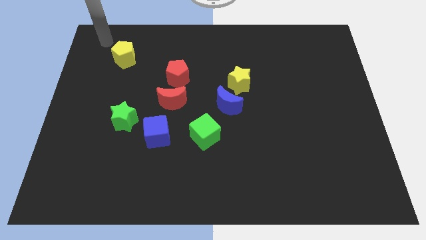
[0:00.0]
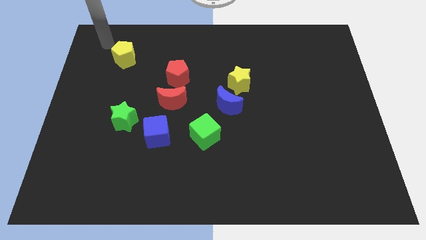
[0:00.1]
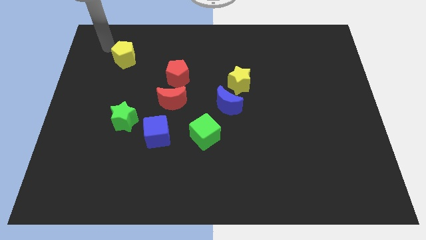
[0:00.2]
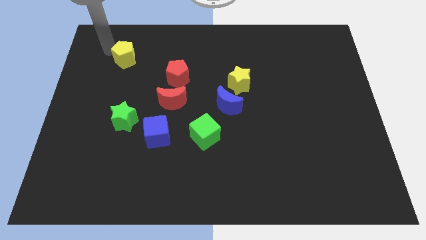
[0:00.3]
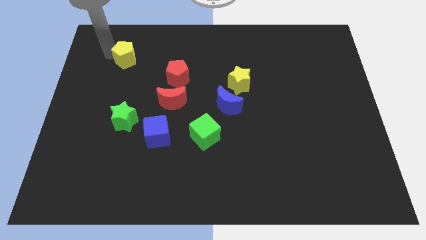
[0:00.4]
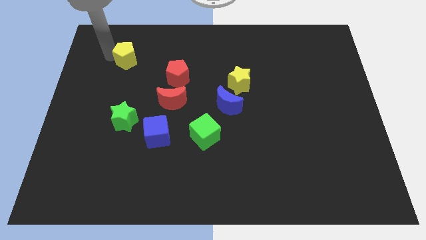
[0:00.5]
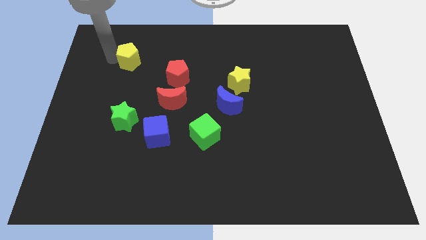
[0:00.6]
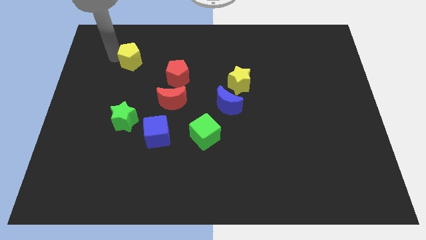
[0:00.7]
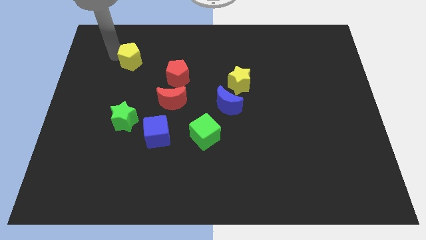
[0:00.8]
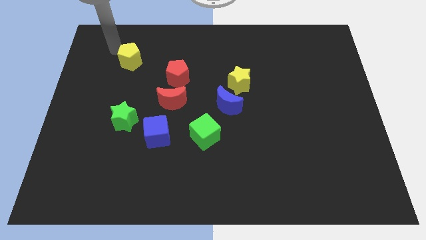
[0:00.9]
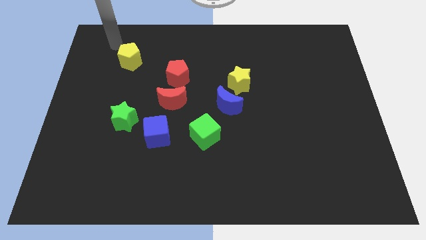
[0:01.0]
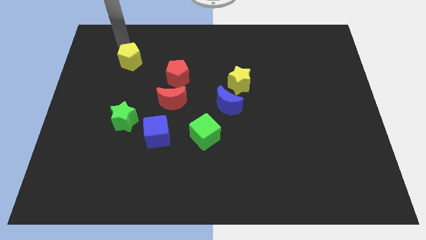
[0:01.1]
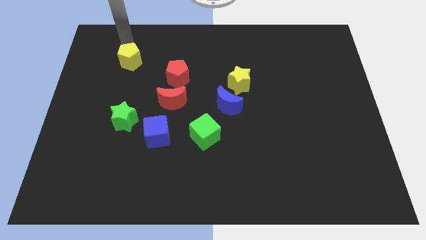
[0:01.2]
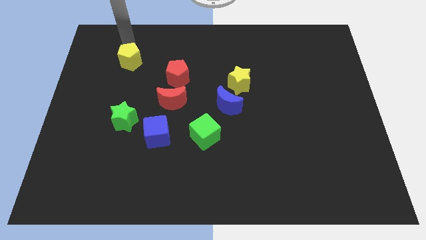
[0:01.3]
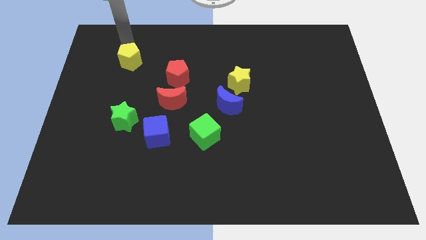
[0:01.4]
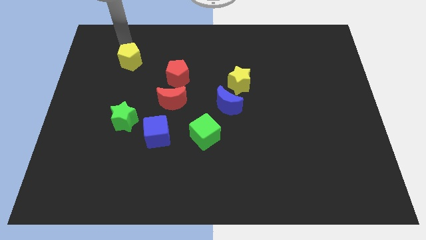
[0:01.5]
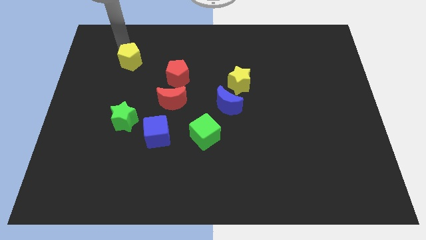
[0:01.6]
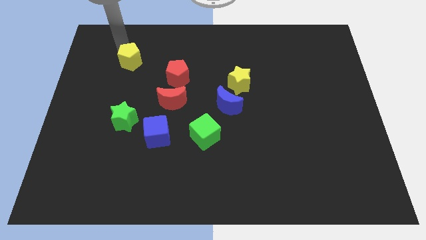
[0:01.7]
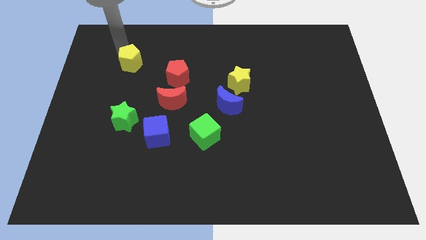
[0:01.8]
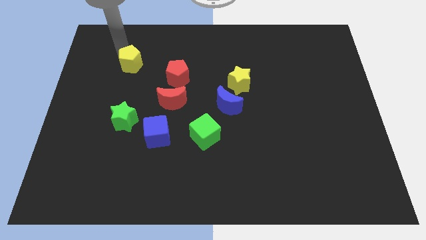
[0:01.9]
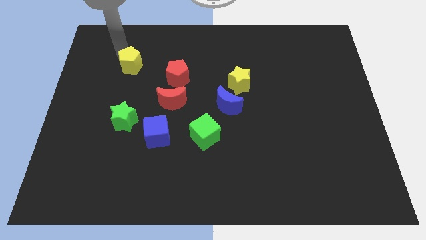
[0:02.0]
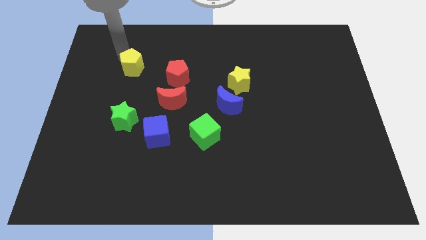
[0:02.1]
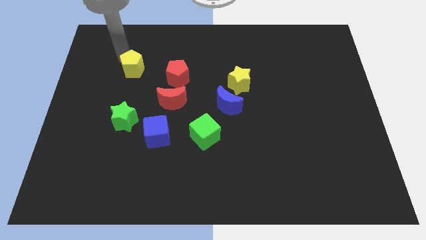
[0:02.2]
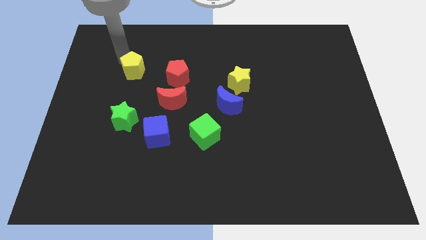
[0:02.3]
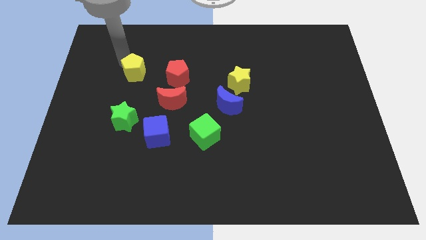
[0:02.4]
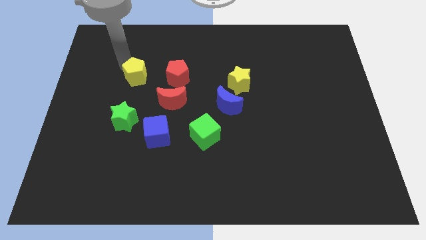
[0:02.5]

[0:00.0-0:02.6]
move the yellow pentagon to the left of the red pentagon

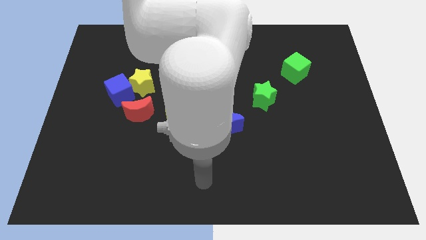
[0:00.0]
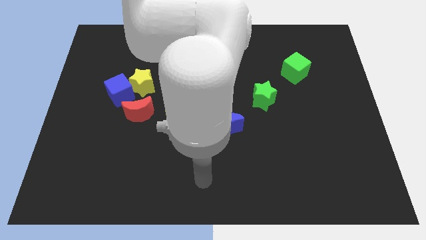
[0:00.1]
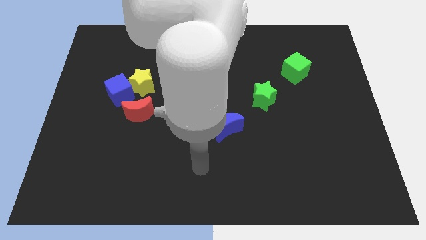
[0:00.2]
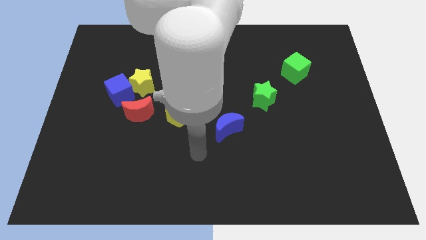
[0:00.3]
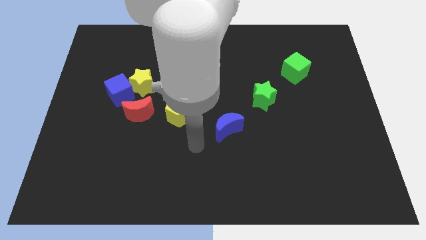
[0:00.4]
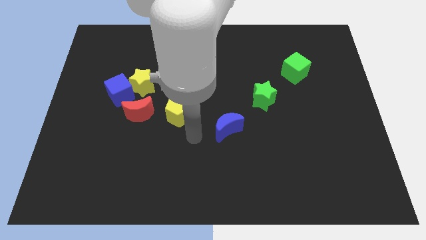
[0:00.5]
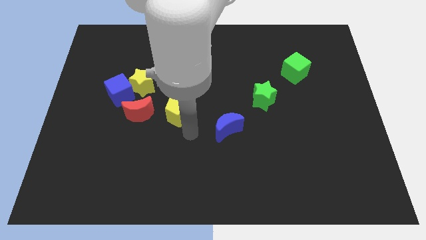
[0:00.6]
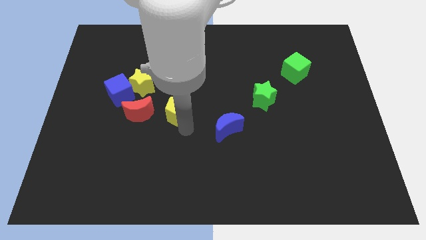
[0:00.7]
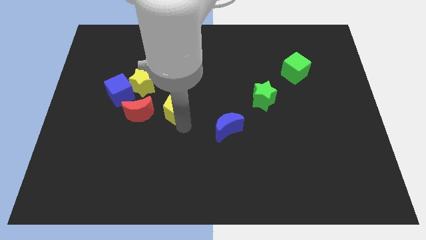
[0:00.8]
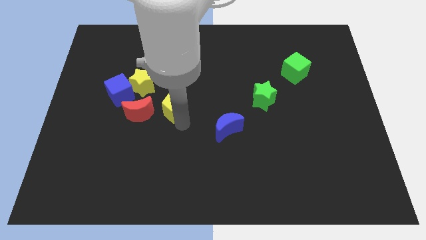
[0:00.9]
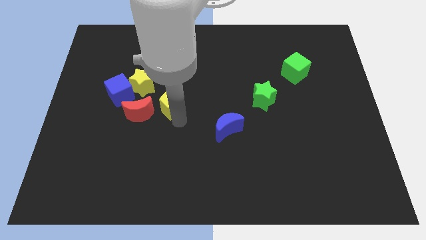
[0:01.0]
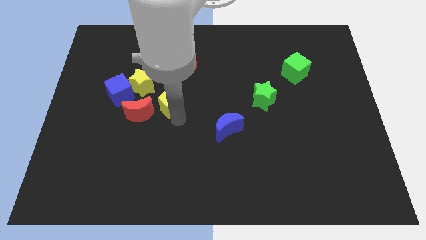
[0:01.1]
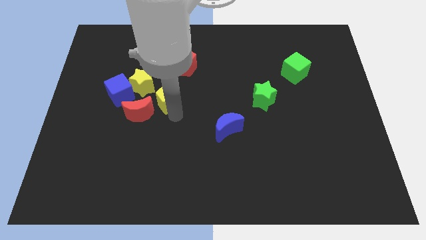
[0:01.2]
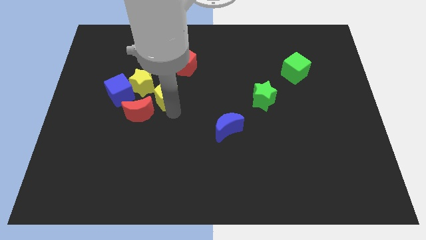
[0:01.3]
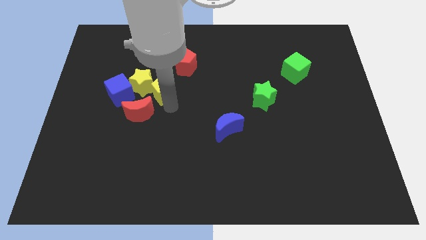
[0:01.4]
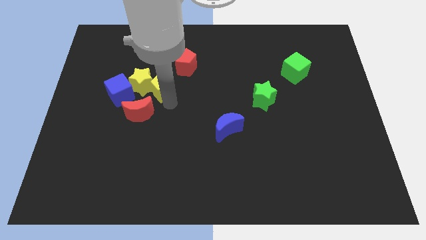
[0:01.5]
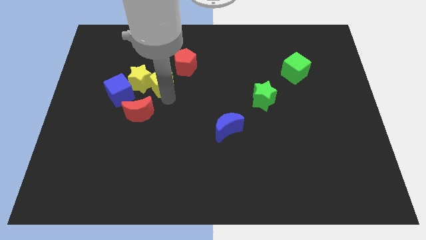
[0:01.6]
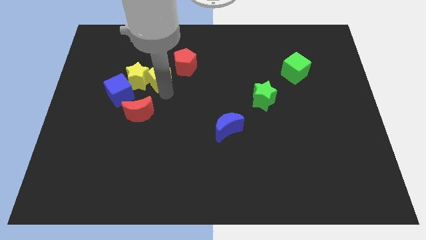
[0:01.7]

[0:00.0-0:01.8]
push the yellow pentagon into yellow star below

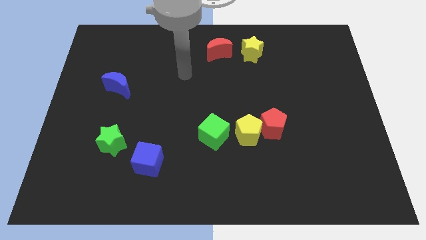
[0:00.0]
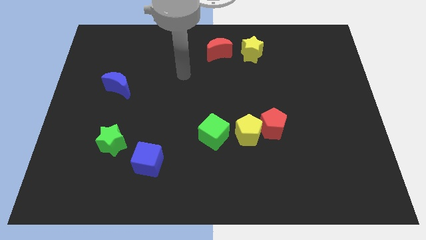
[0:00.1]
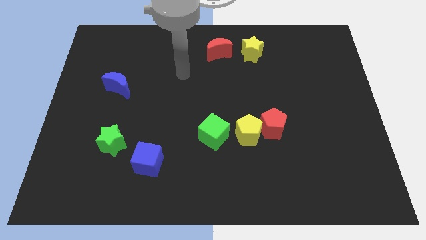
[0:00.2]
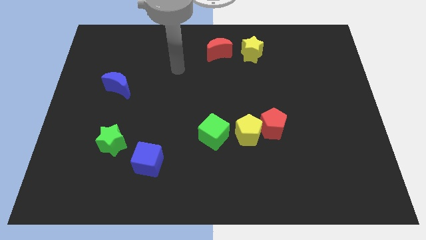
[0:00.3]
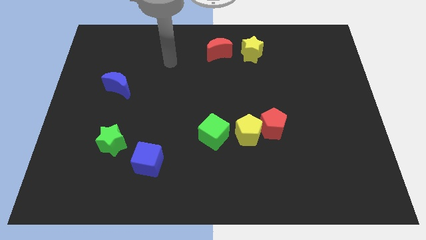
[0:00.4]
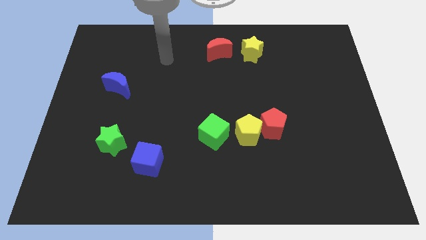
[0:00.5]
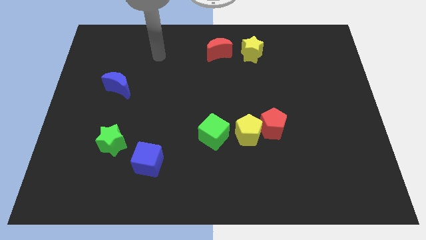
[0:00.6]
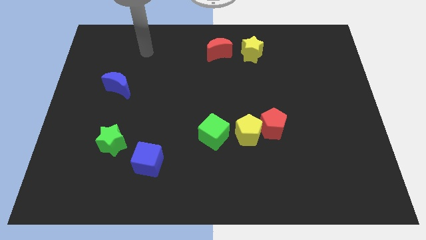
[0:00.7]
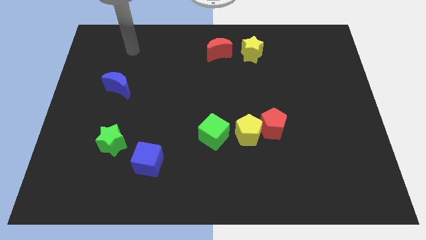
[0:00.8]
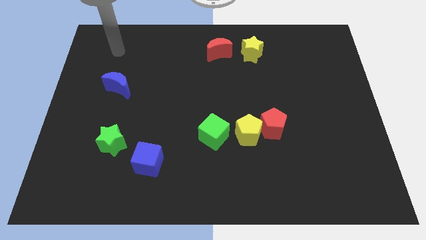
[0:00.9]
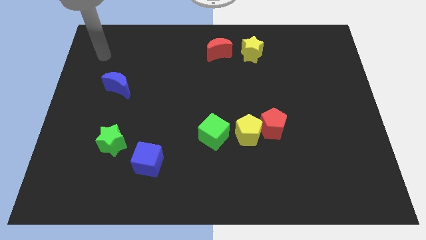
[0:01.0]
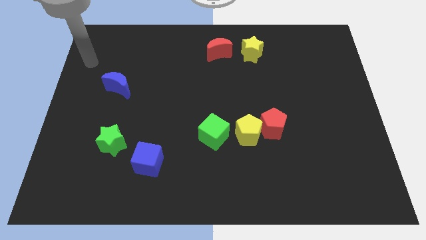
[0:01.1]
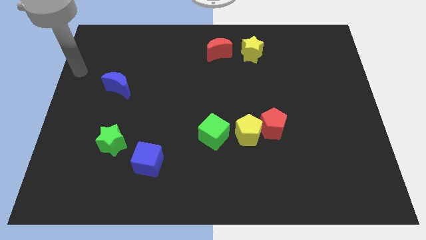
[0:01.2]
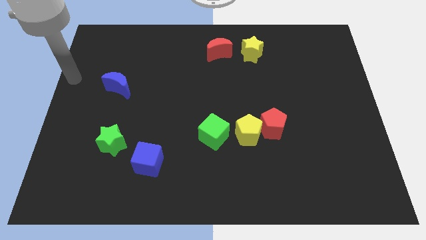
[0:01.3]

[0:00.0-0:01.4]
move the arm to the left side of the board

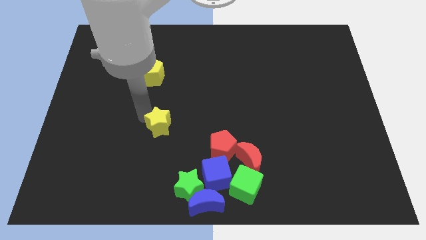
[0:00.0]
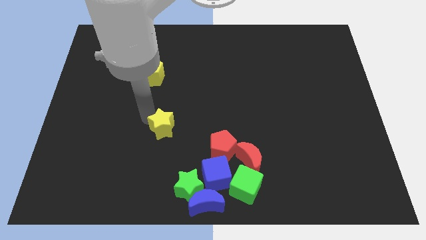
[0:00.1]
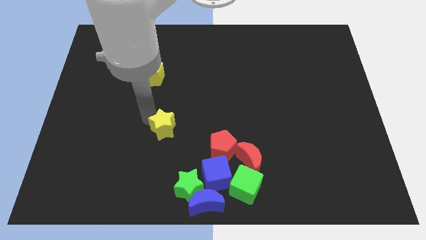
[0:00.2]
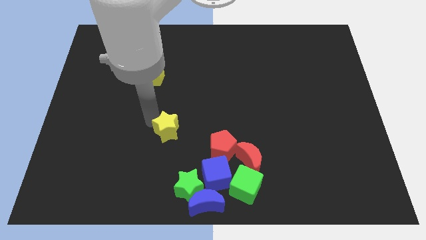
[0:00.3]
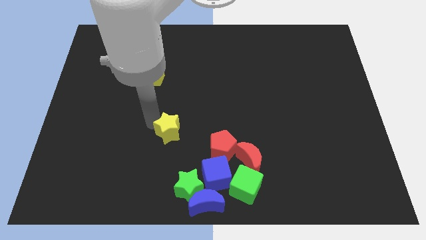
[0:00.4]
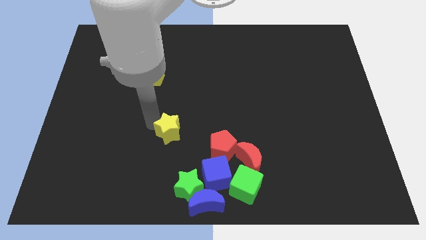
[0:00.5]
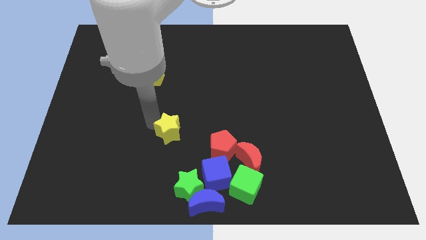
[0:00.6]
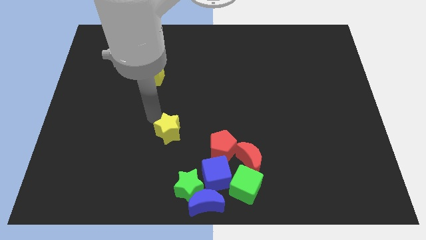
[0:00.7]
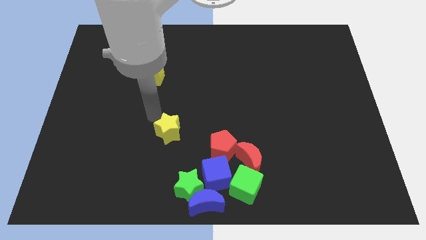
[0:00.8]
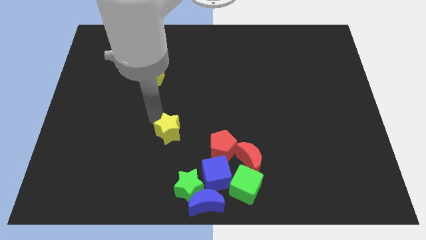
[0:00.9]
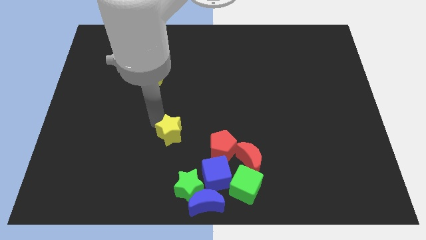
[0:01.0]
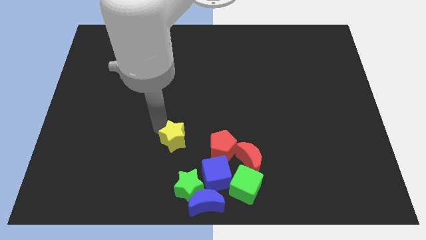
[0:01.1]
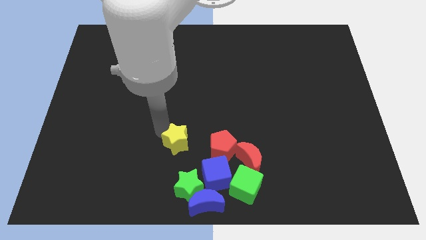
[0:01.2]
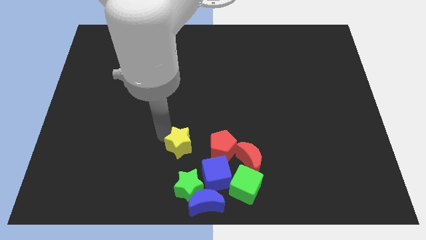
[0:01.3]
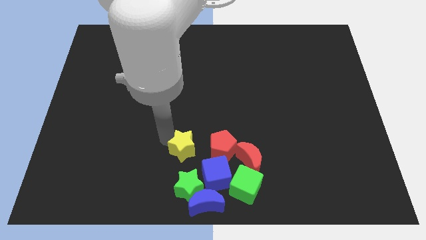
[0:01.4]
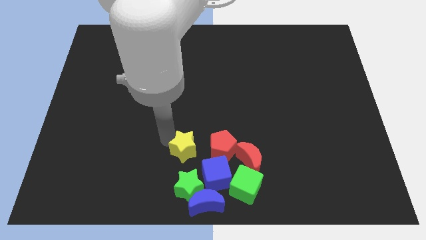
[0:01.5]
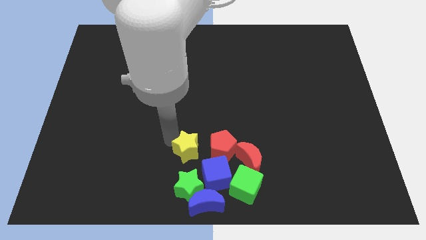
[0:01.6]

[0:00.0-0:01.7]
push the yellow star left to the red pentagon

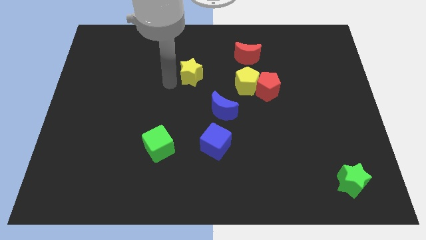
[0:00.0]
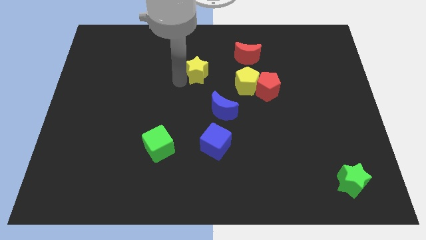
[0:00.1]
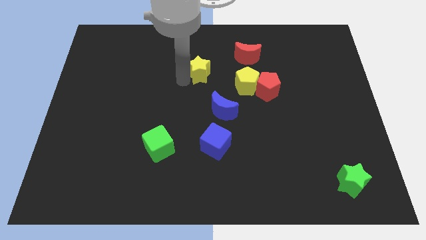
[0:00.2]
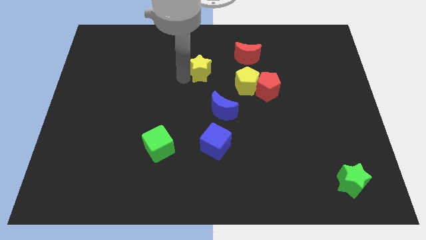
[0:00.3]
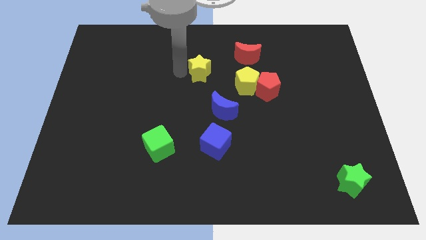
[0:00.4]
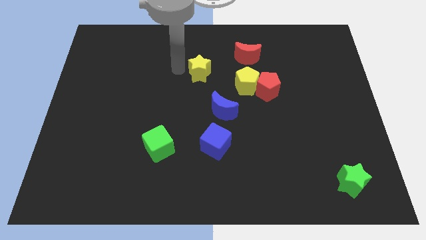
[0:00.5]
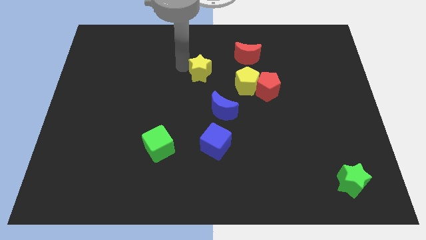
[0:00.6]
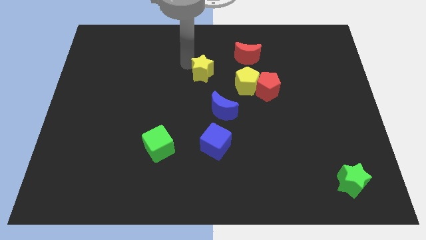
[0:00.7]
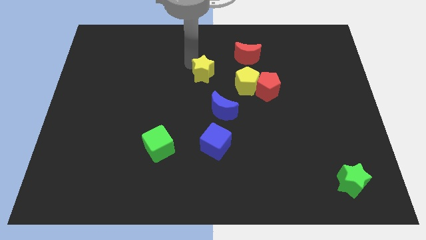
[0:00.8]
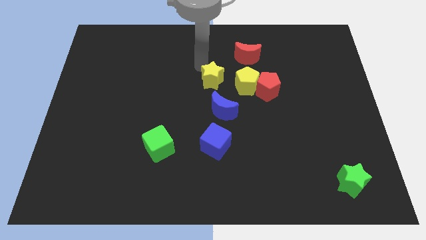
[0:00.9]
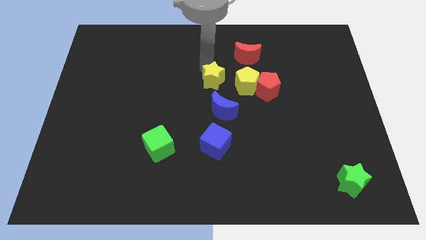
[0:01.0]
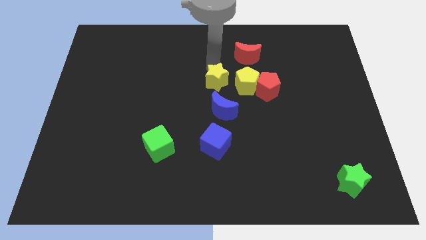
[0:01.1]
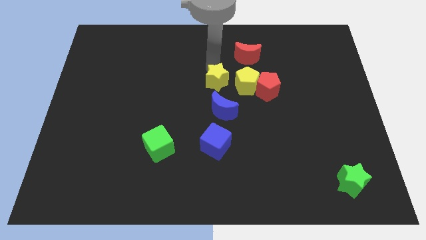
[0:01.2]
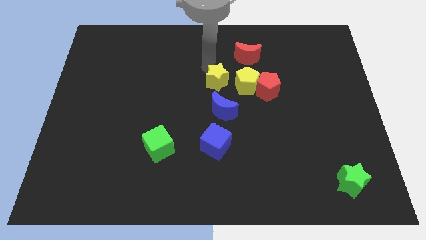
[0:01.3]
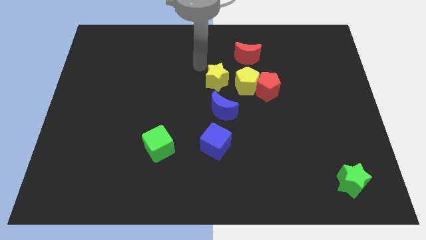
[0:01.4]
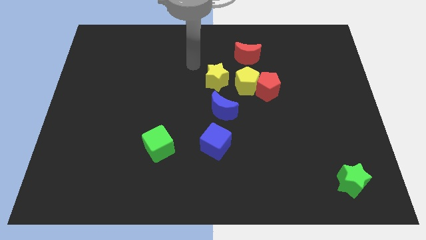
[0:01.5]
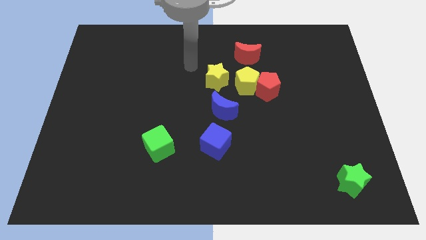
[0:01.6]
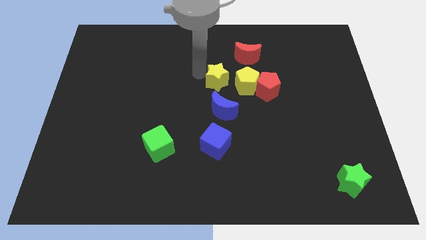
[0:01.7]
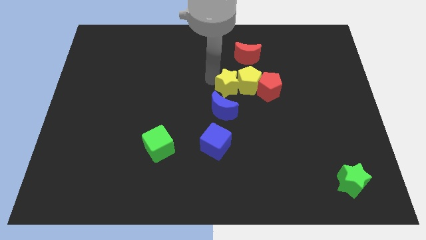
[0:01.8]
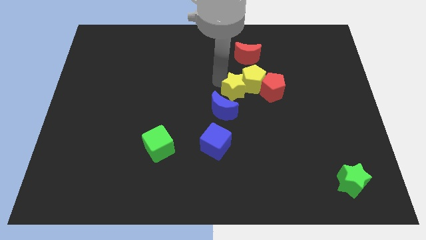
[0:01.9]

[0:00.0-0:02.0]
place the yellow star above the blue moon
